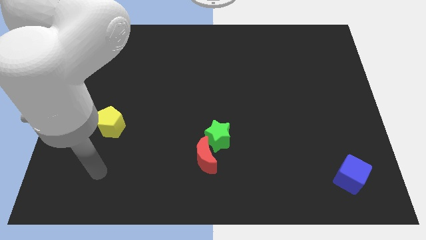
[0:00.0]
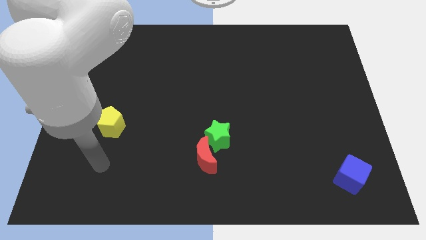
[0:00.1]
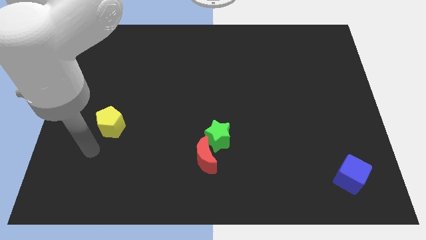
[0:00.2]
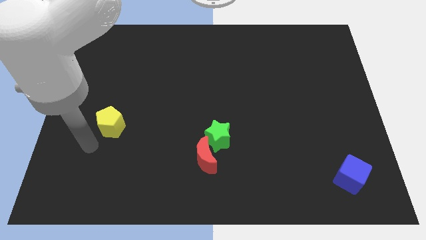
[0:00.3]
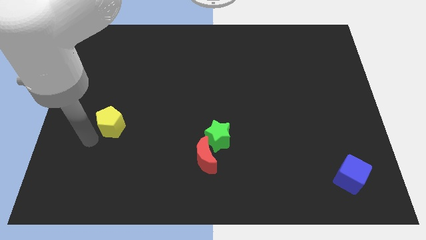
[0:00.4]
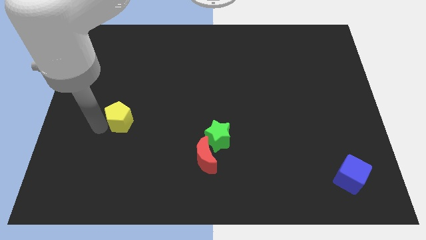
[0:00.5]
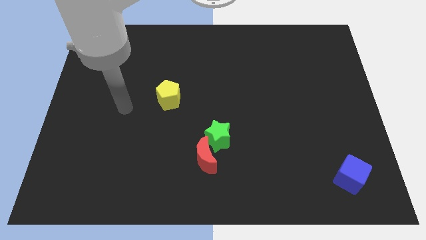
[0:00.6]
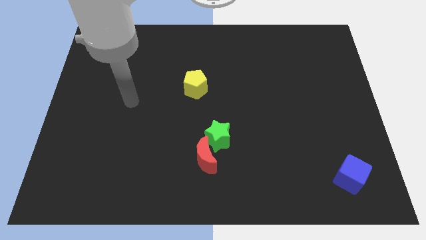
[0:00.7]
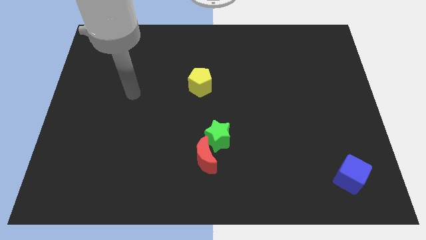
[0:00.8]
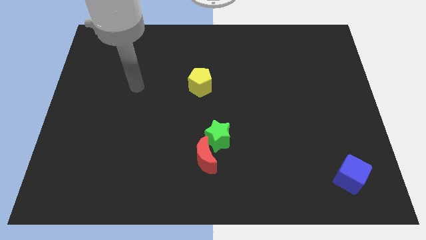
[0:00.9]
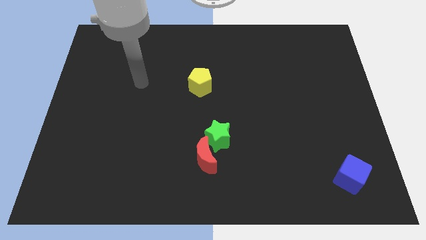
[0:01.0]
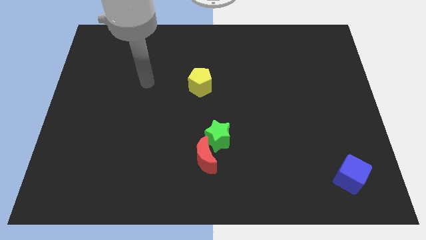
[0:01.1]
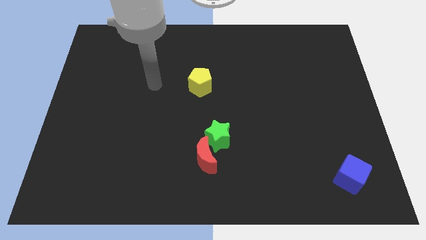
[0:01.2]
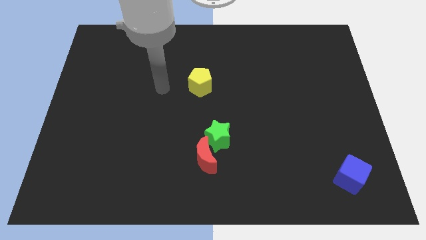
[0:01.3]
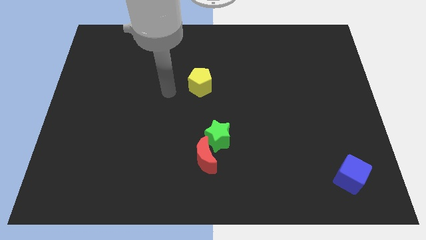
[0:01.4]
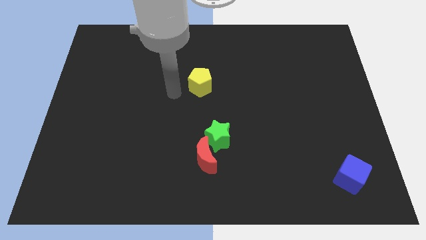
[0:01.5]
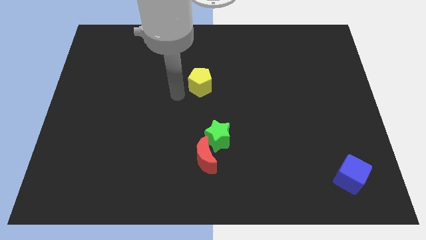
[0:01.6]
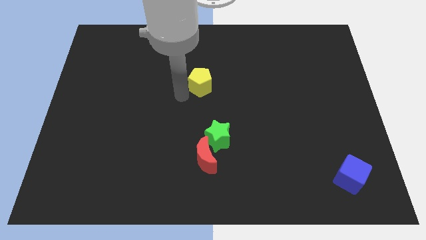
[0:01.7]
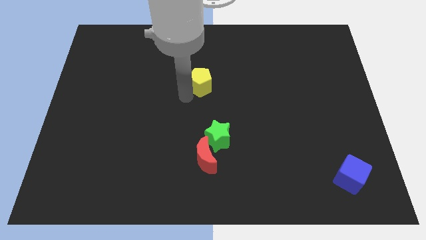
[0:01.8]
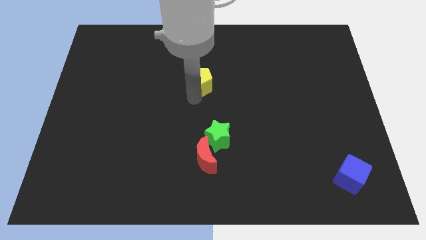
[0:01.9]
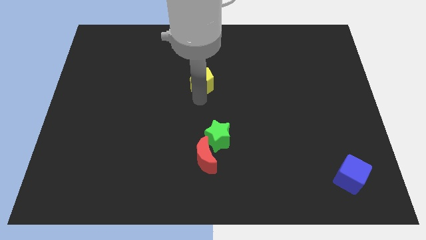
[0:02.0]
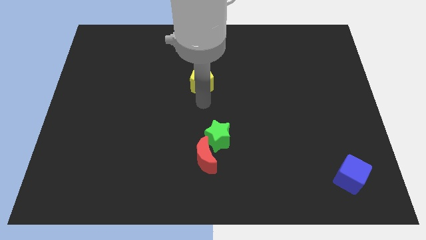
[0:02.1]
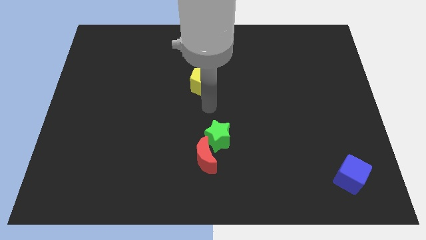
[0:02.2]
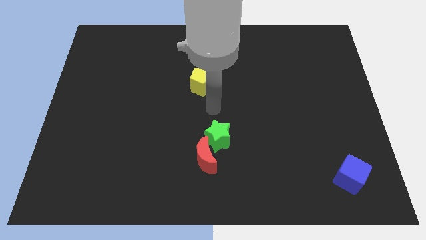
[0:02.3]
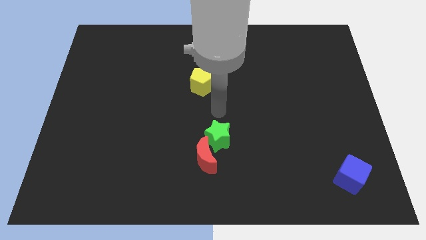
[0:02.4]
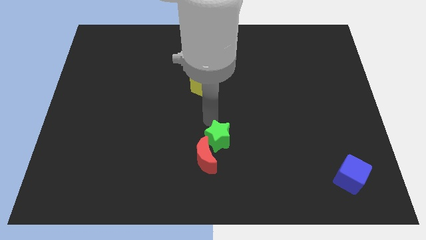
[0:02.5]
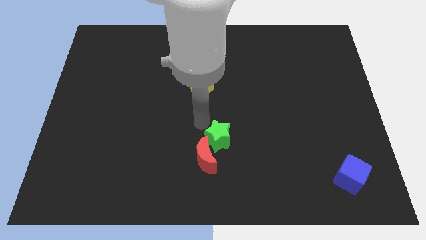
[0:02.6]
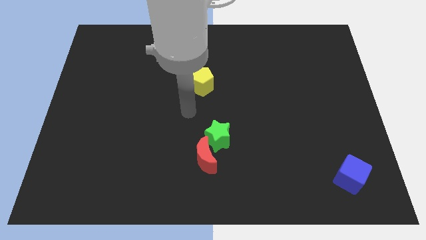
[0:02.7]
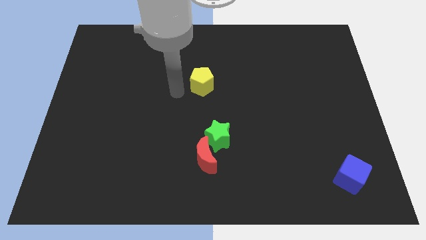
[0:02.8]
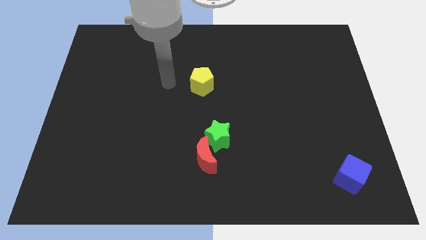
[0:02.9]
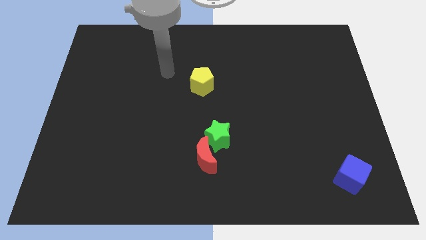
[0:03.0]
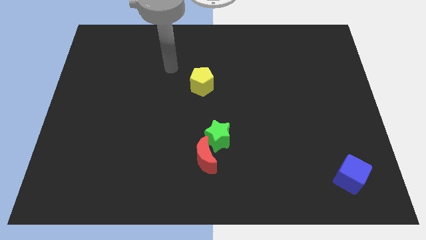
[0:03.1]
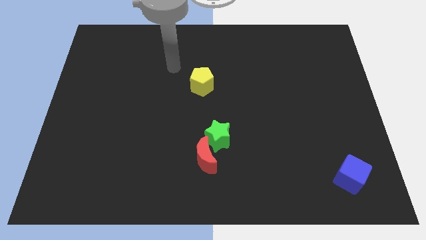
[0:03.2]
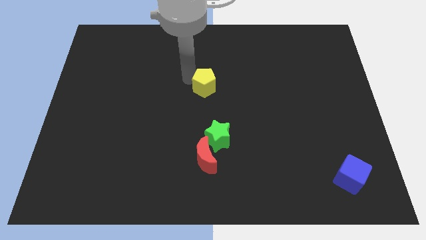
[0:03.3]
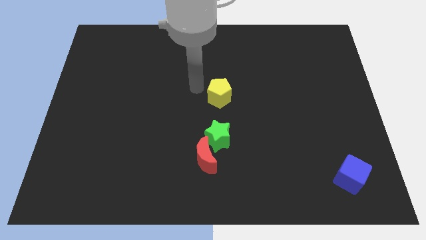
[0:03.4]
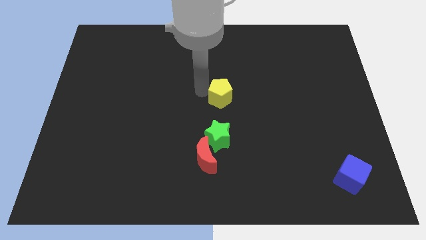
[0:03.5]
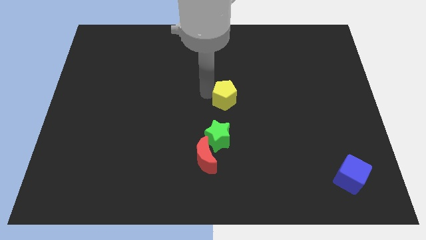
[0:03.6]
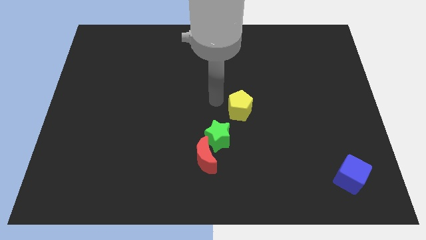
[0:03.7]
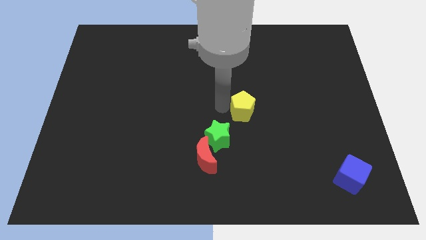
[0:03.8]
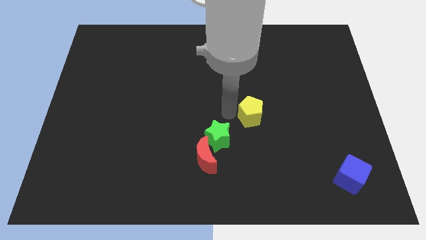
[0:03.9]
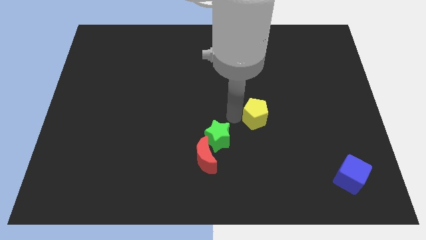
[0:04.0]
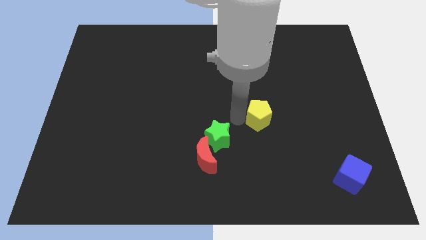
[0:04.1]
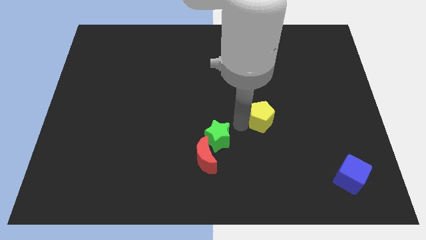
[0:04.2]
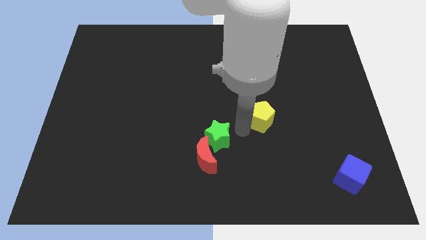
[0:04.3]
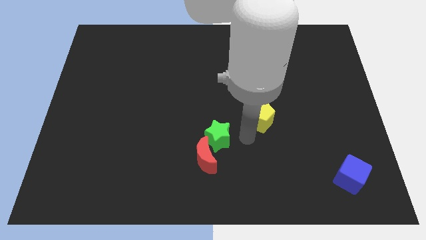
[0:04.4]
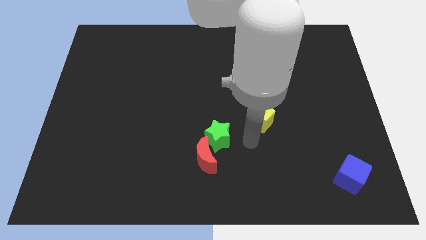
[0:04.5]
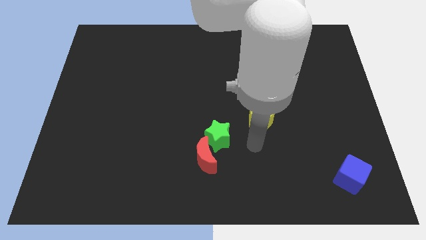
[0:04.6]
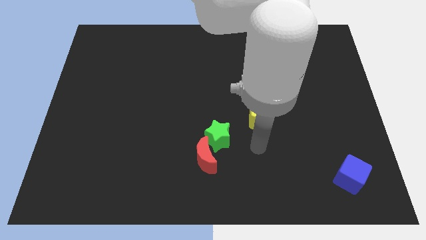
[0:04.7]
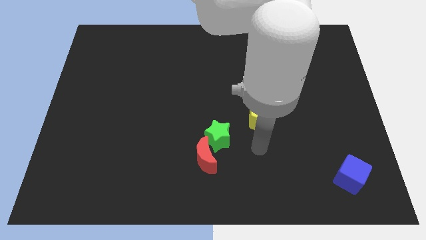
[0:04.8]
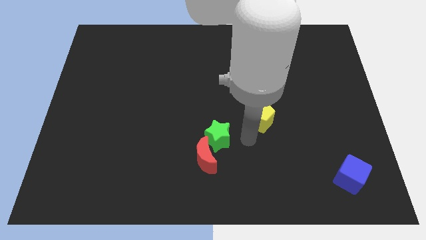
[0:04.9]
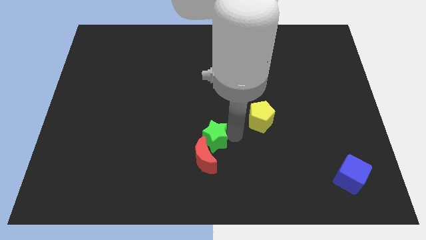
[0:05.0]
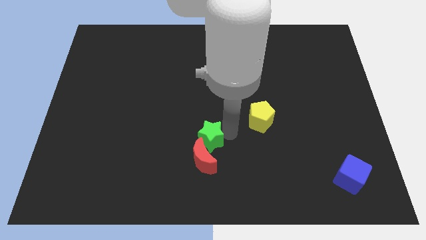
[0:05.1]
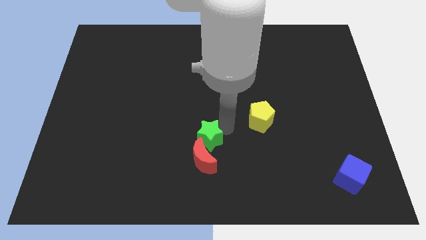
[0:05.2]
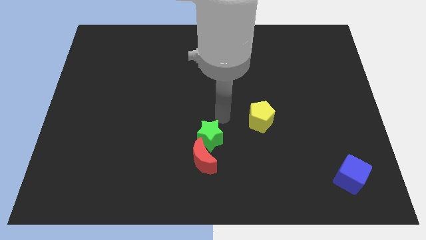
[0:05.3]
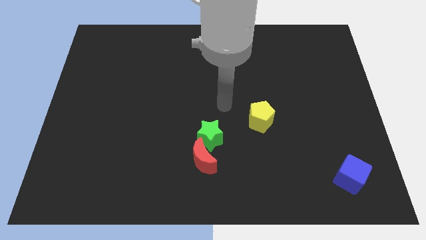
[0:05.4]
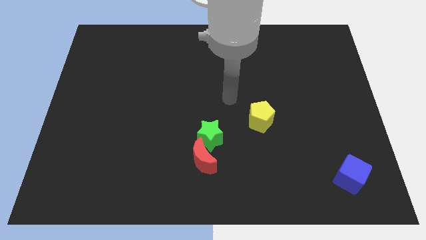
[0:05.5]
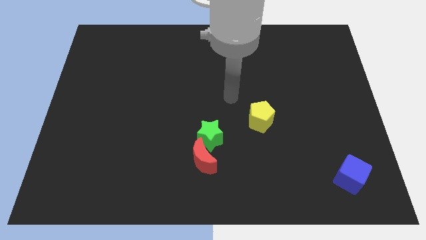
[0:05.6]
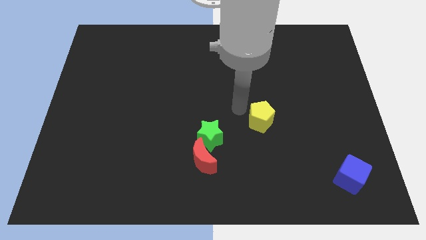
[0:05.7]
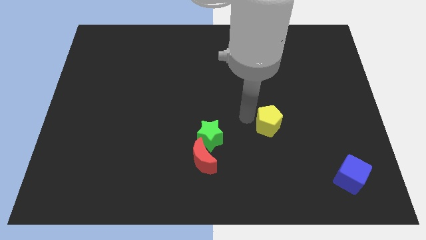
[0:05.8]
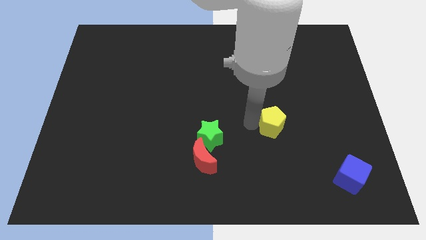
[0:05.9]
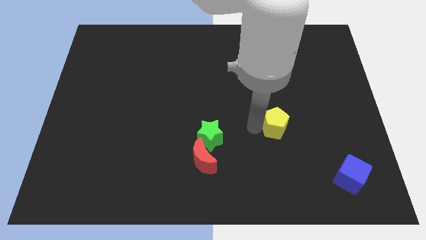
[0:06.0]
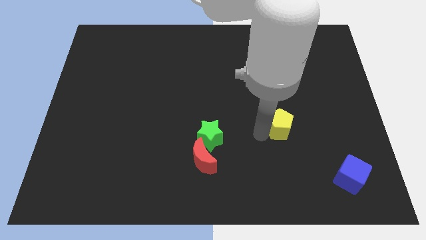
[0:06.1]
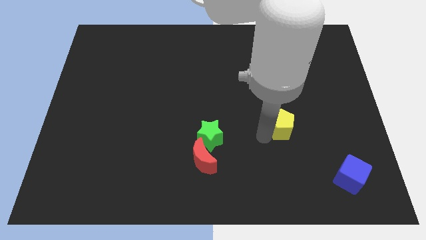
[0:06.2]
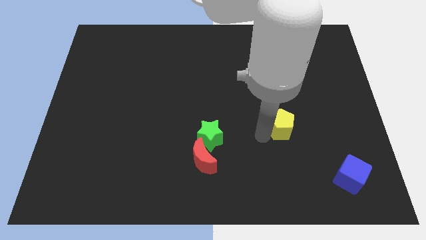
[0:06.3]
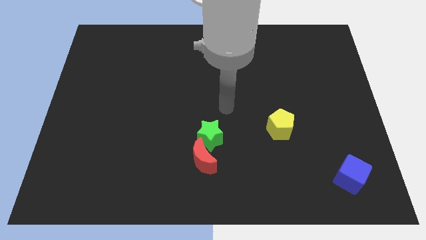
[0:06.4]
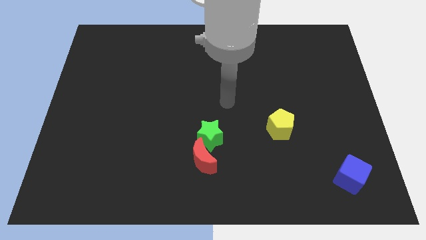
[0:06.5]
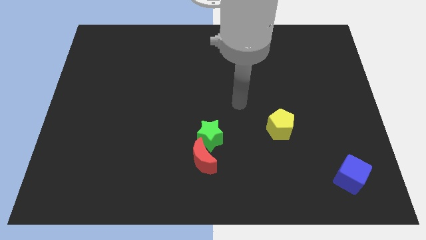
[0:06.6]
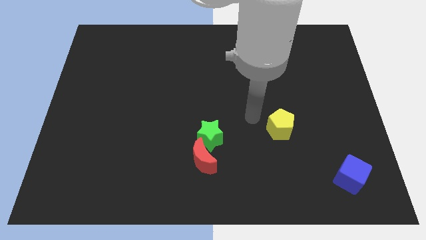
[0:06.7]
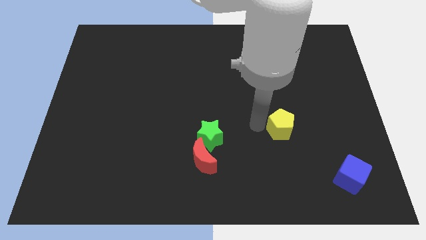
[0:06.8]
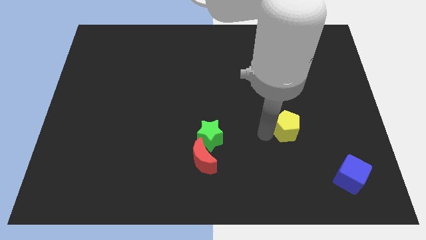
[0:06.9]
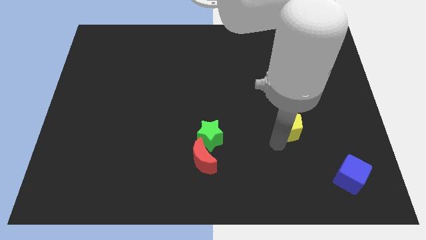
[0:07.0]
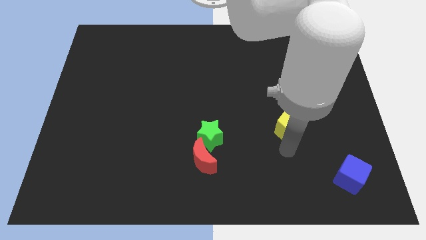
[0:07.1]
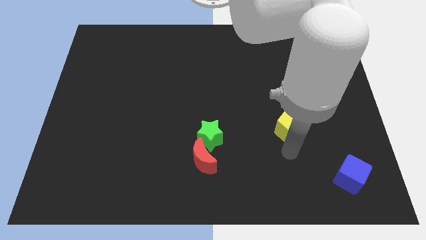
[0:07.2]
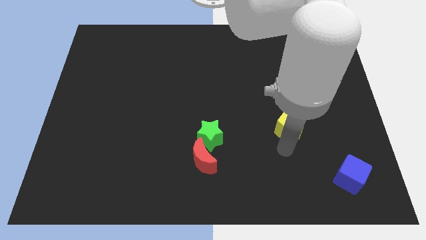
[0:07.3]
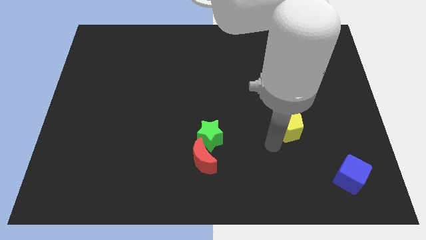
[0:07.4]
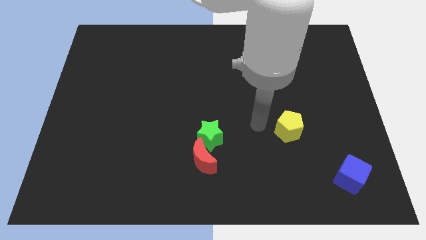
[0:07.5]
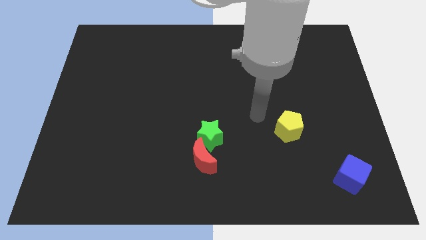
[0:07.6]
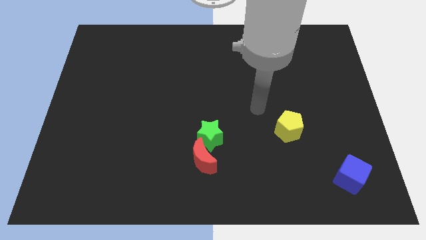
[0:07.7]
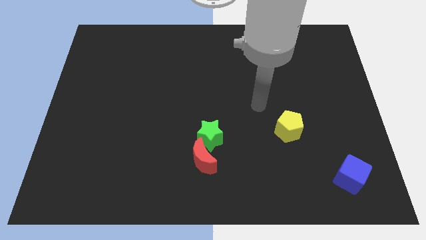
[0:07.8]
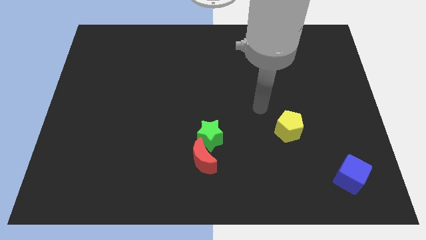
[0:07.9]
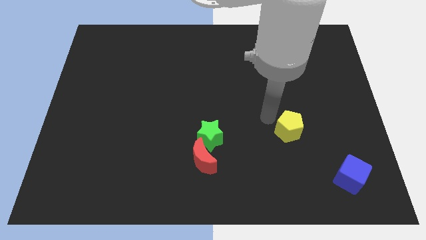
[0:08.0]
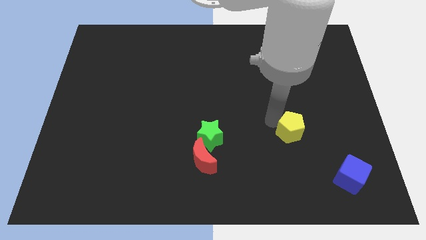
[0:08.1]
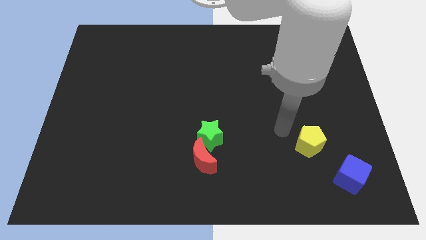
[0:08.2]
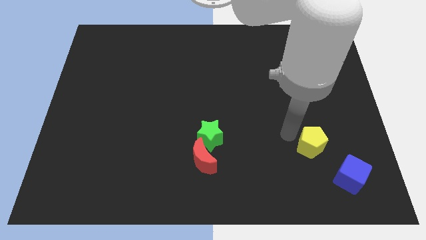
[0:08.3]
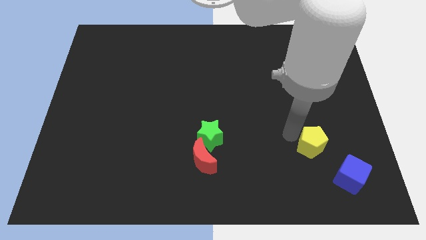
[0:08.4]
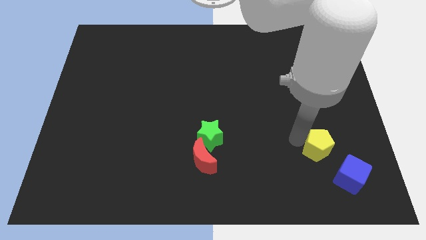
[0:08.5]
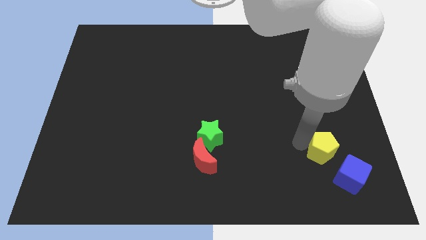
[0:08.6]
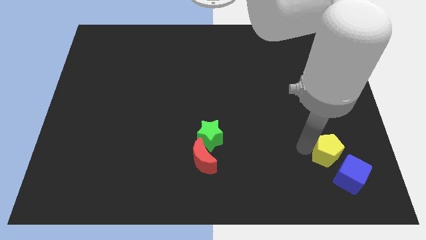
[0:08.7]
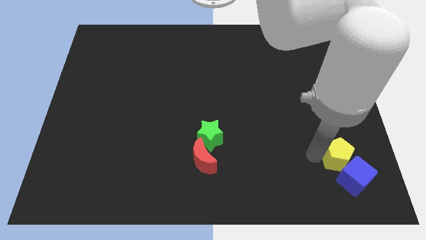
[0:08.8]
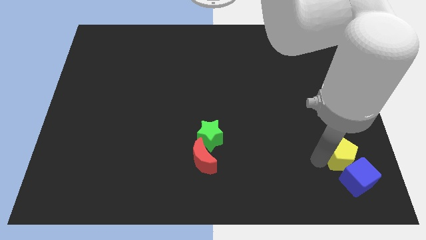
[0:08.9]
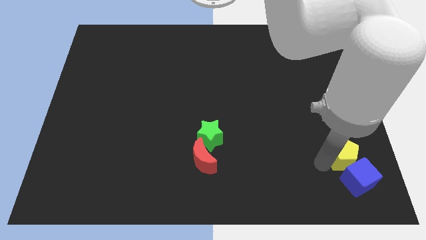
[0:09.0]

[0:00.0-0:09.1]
move the pentagon to the blue block
